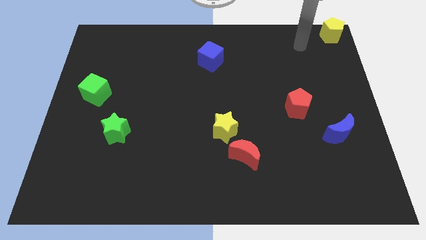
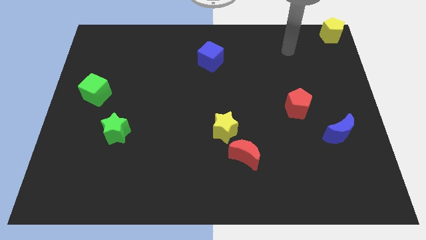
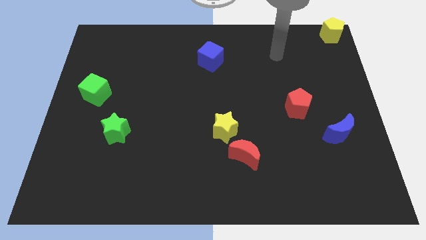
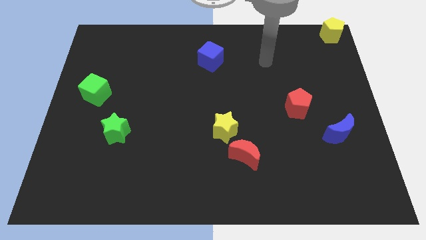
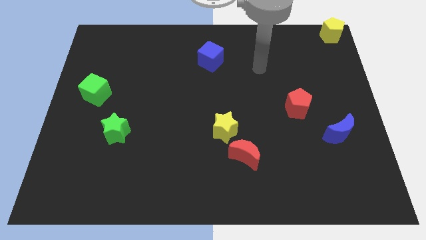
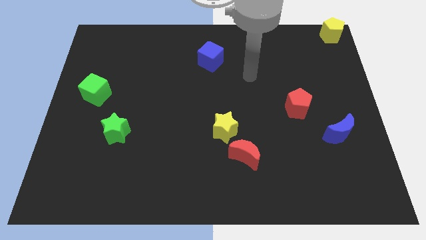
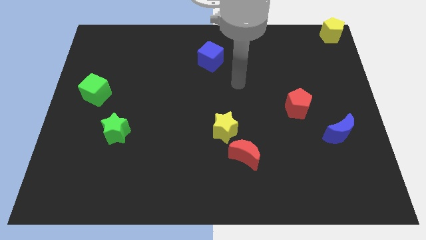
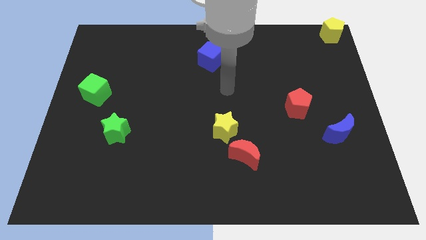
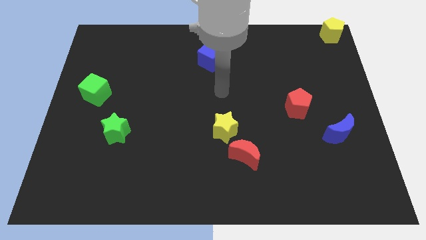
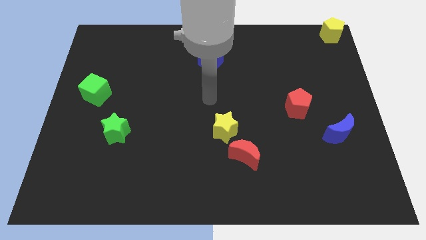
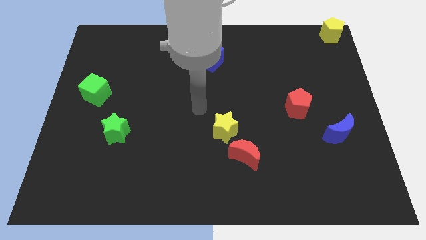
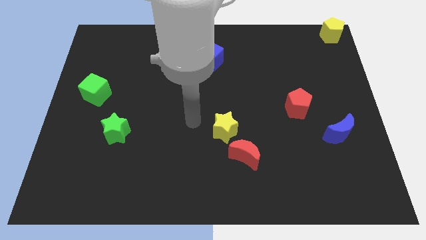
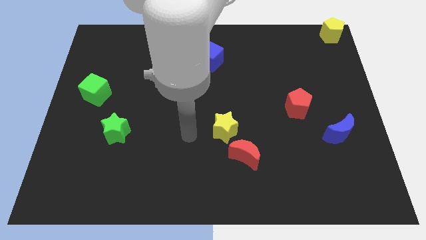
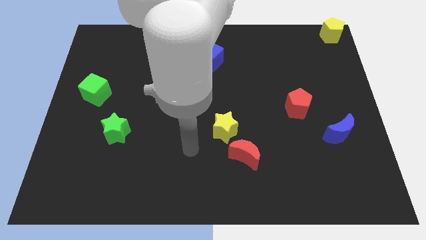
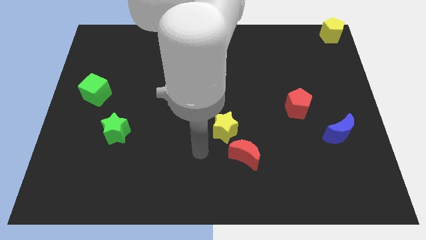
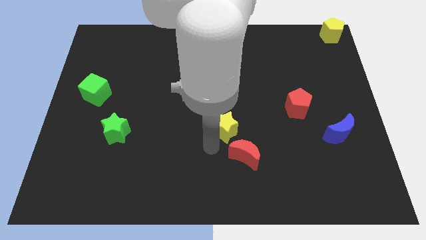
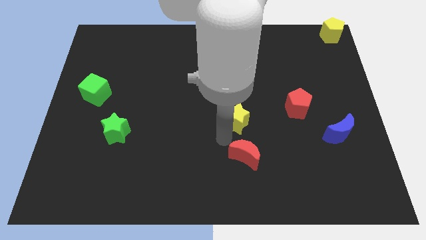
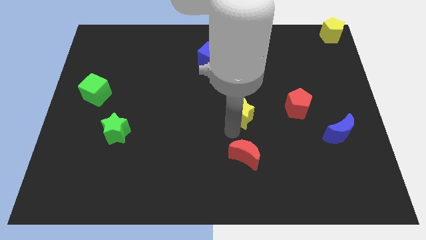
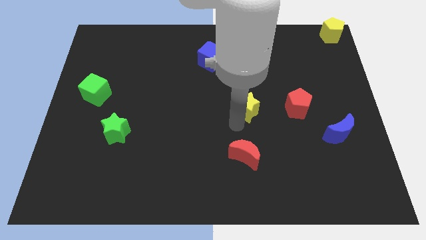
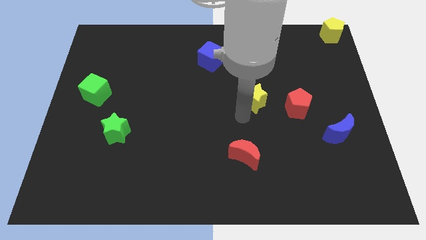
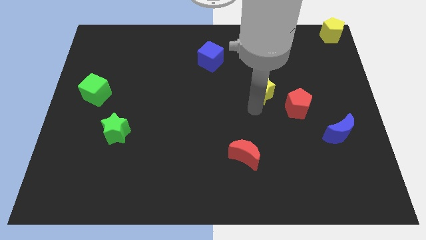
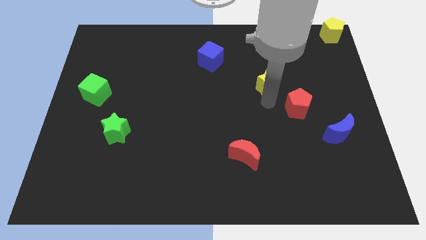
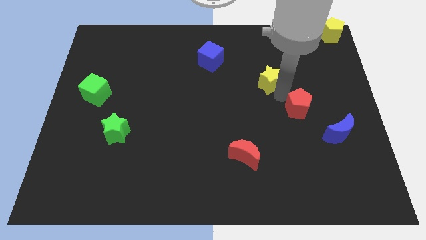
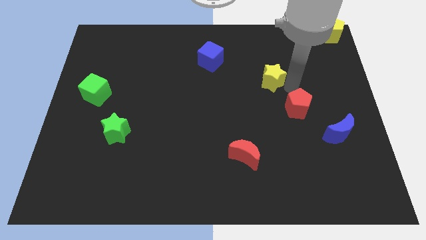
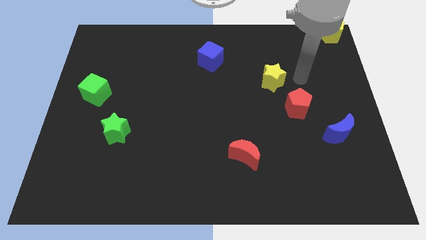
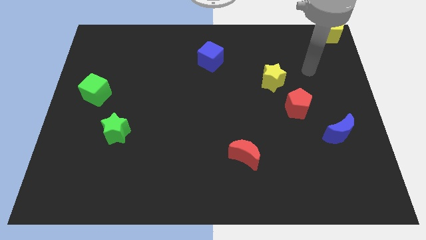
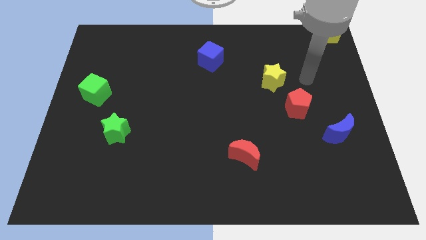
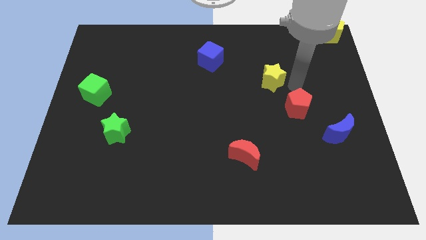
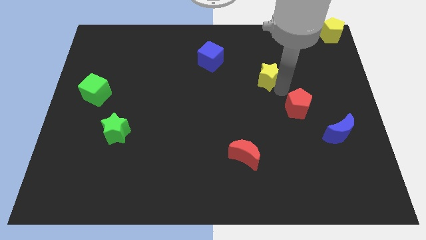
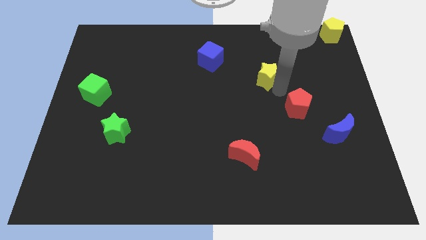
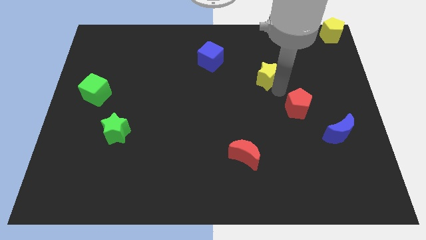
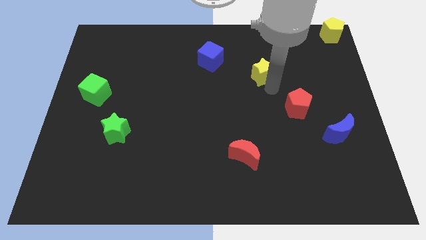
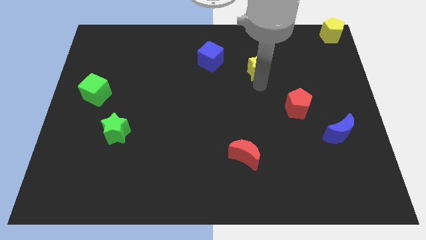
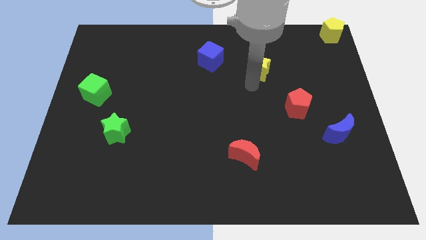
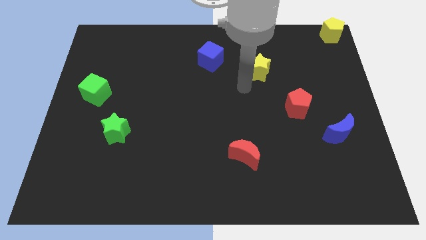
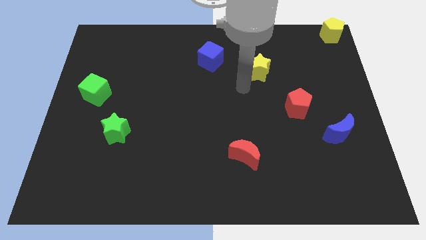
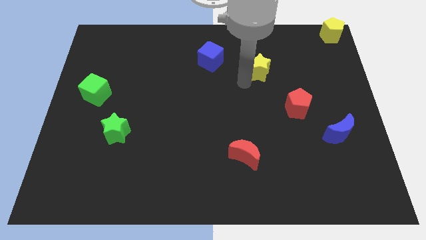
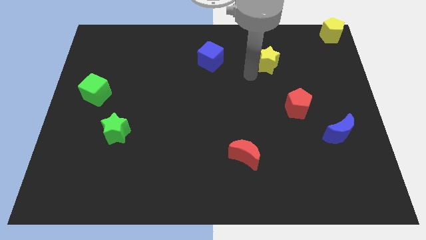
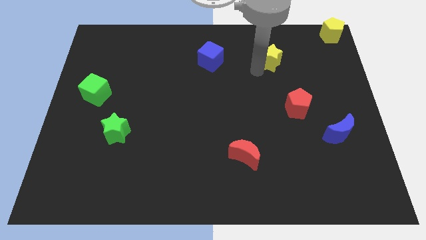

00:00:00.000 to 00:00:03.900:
move the yellow star to the right side of the blue cube

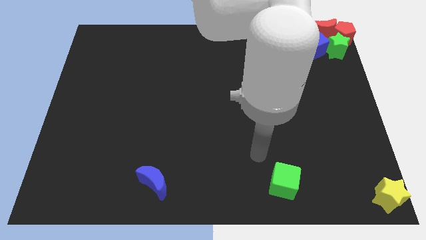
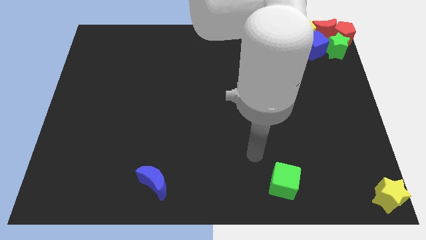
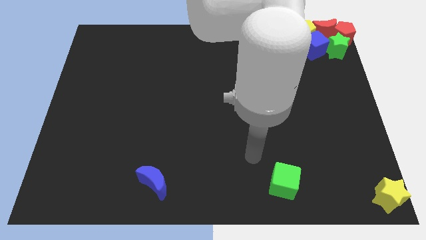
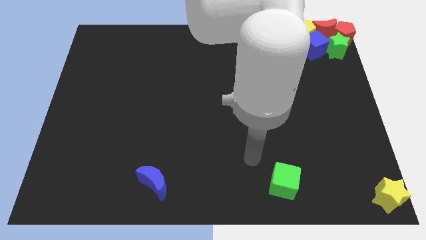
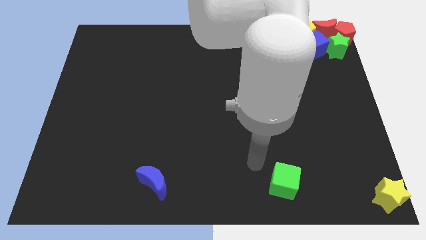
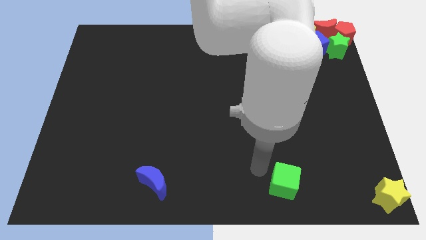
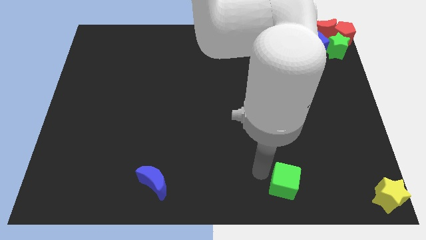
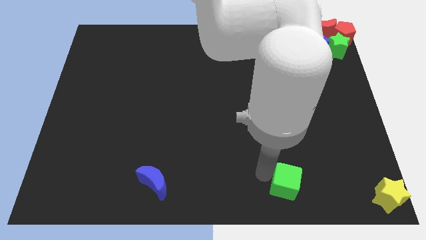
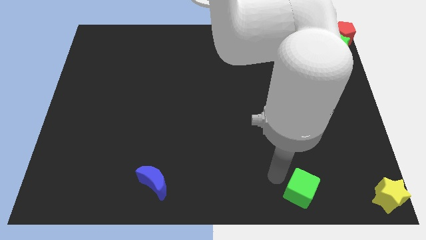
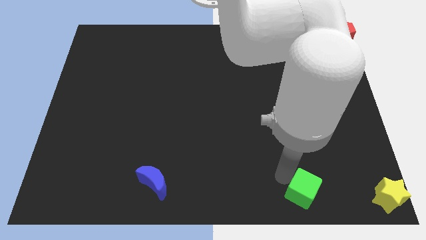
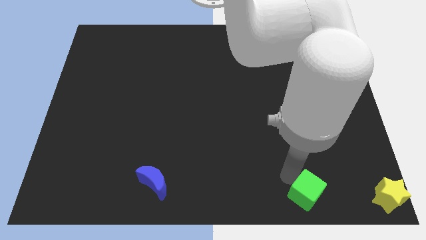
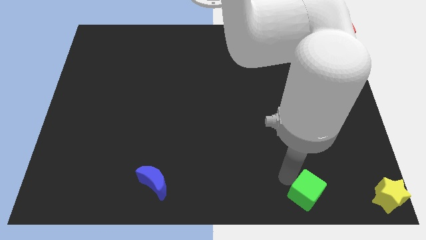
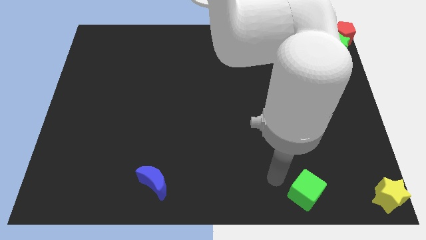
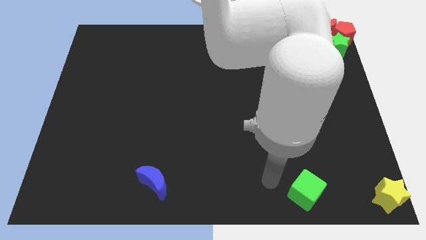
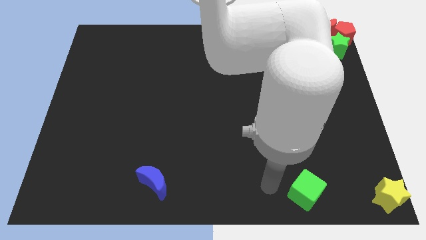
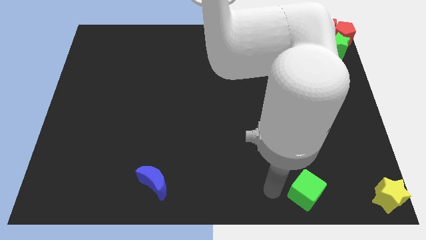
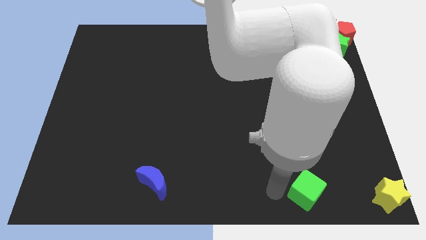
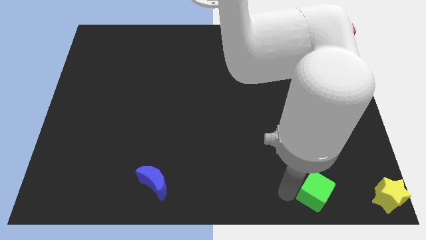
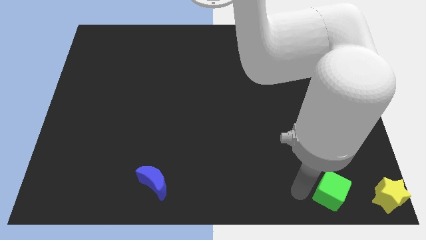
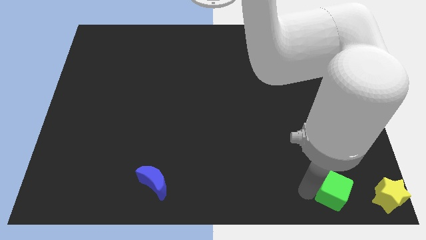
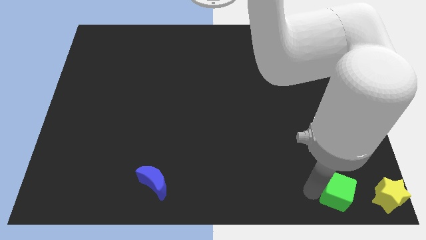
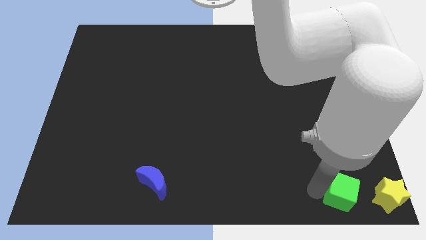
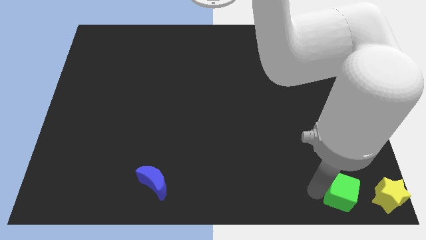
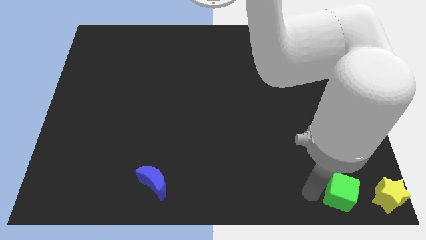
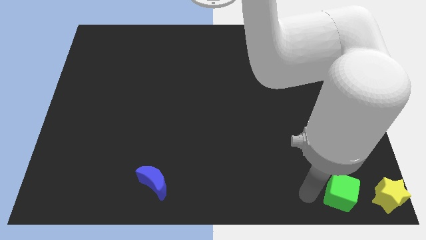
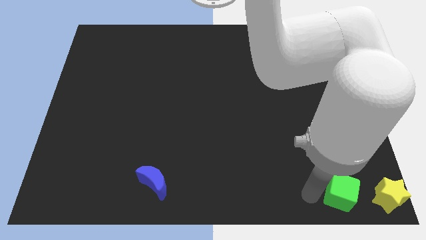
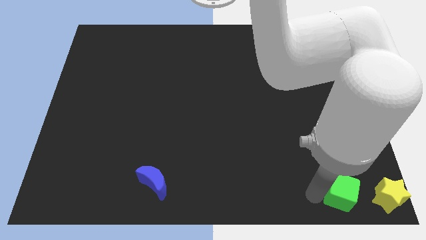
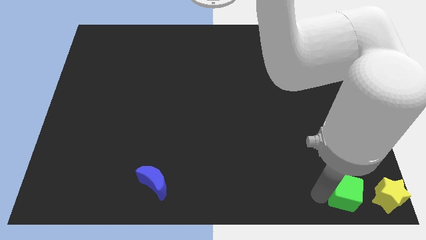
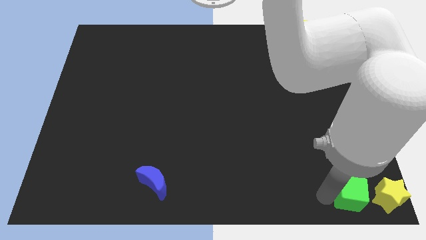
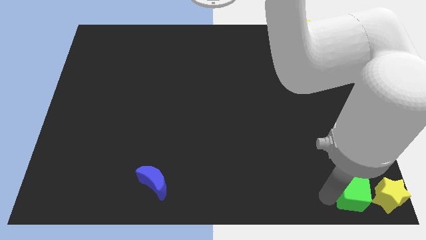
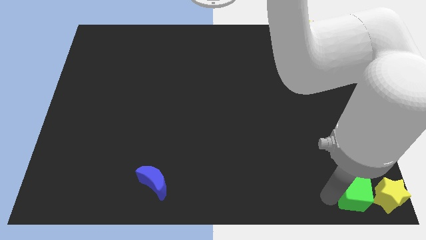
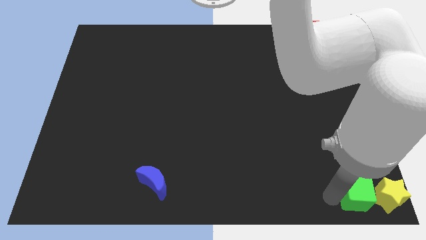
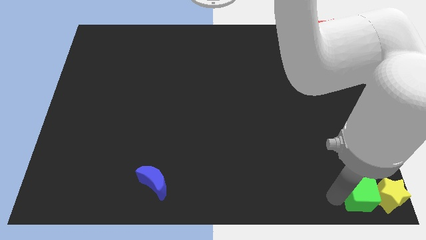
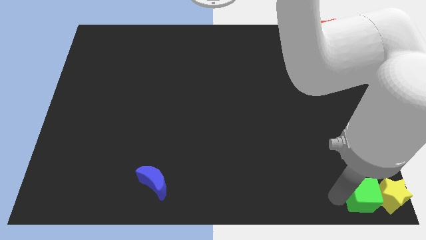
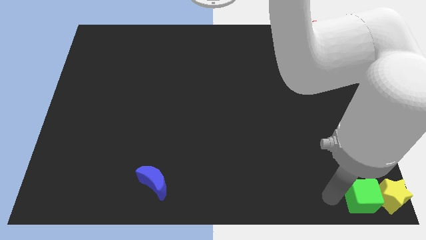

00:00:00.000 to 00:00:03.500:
push the green cube into the yellow star

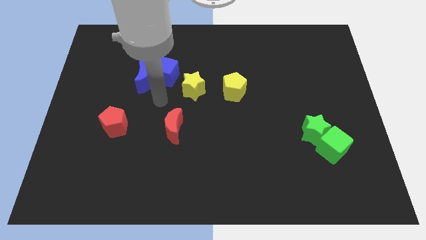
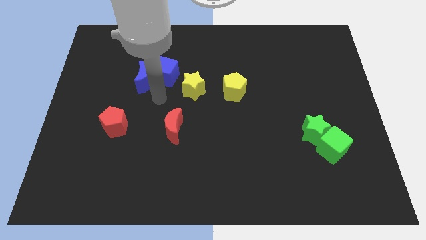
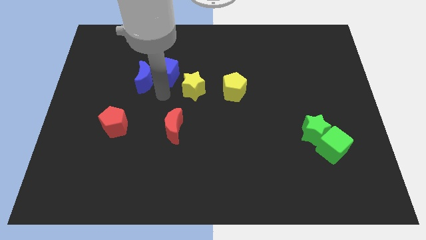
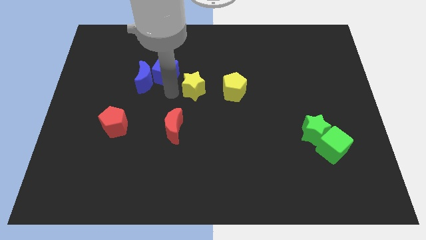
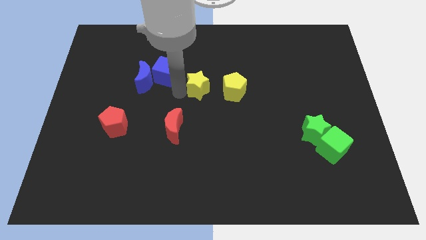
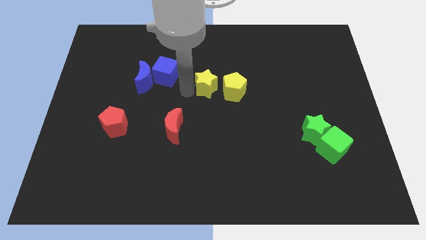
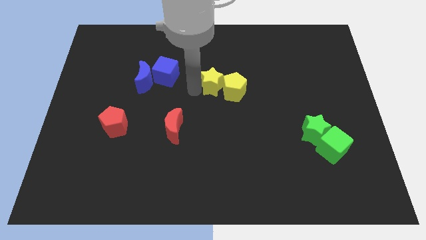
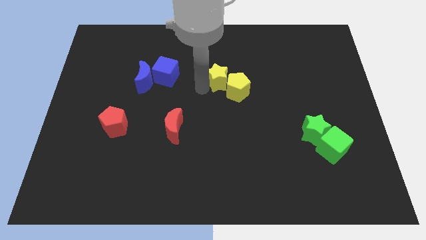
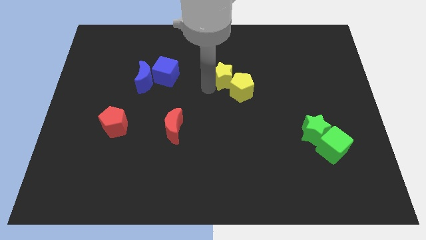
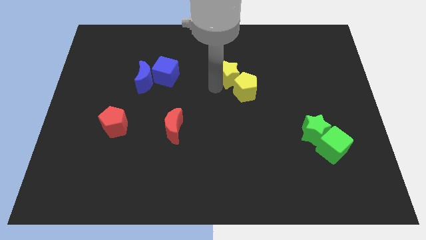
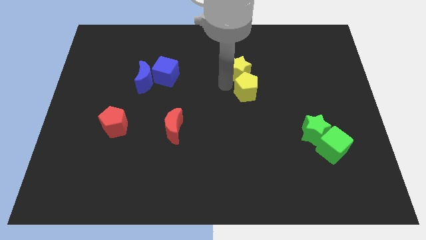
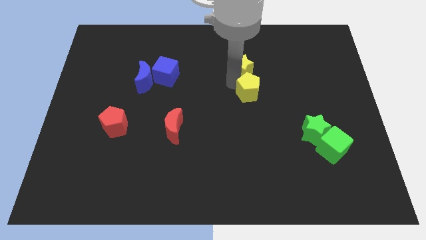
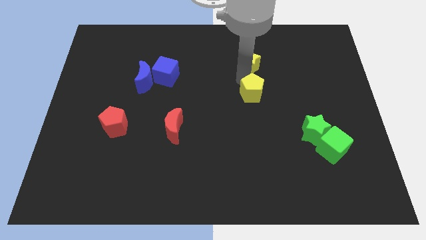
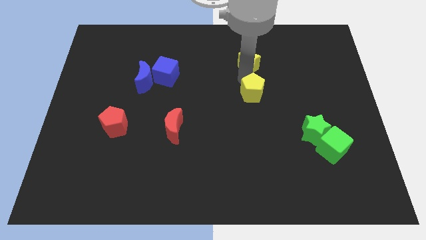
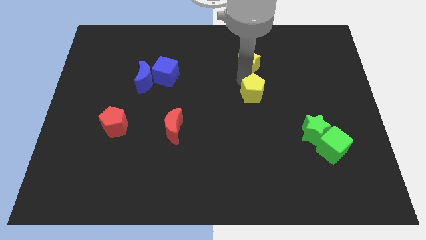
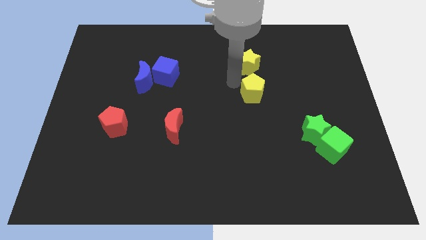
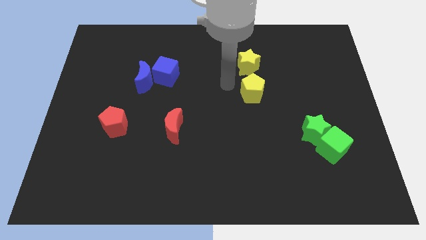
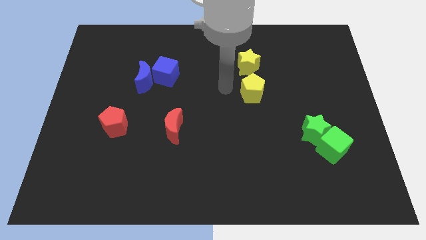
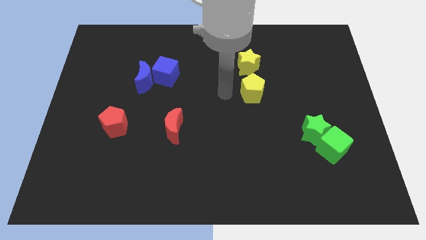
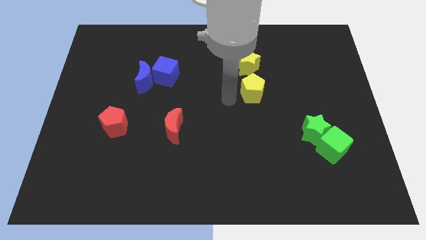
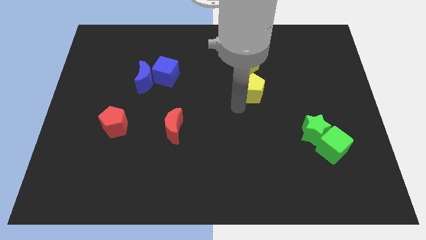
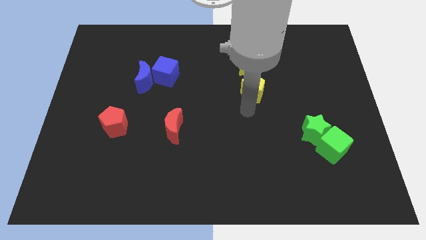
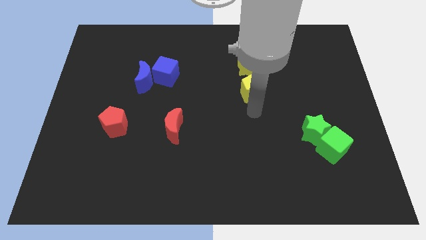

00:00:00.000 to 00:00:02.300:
move the yellow star above the yellow pentagon
